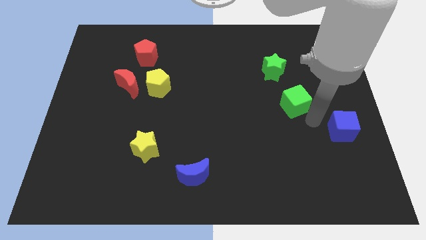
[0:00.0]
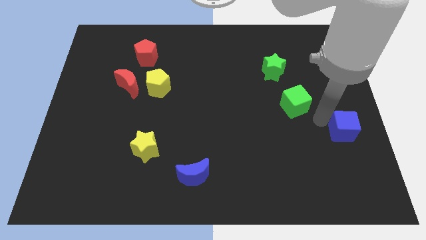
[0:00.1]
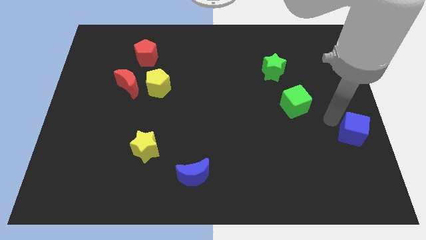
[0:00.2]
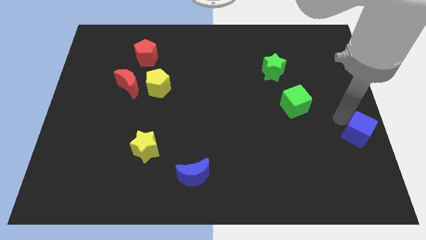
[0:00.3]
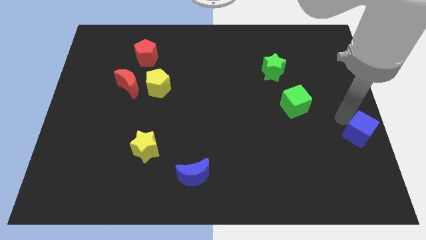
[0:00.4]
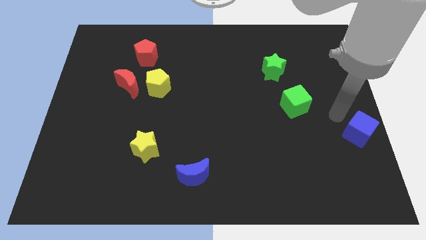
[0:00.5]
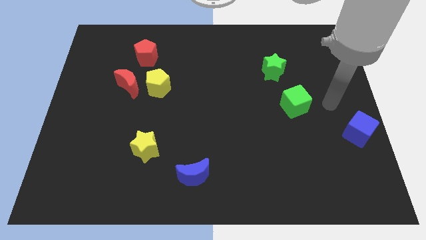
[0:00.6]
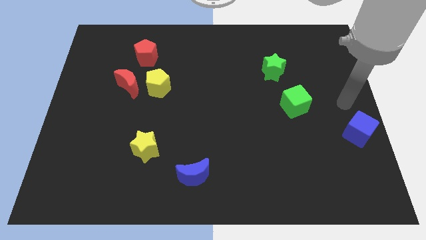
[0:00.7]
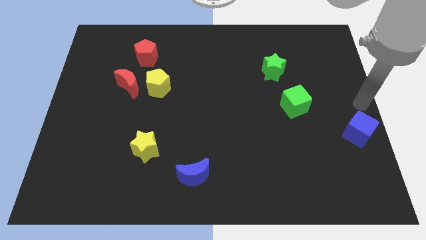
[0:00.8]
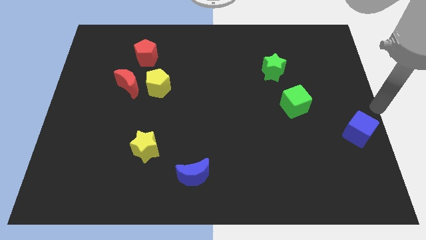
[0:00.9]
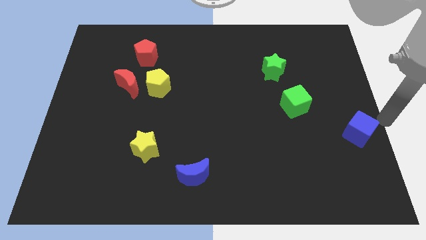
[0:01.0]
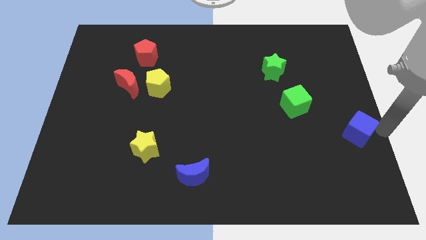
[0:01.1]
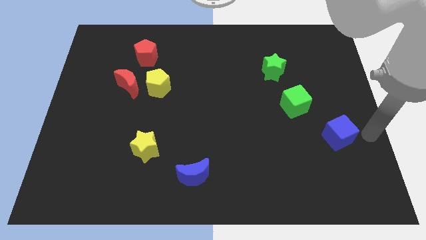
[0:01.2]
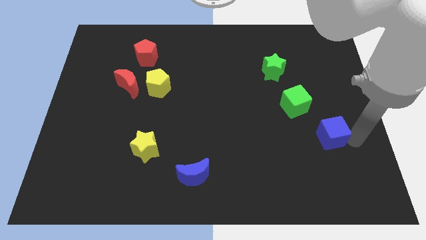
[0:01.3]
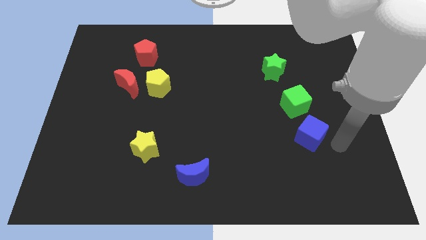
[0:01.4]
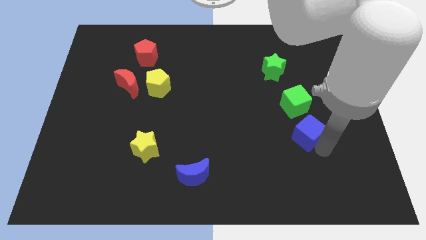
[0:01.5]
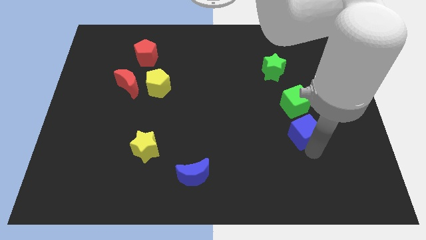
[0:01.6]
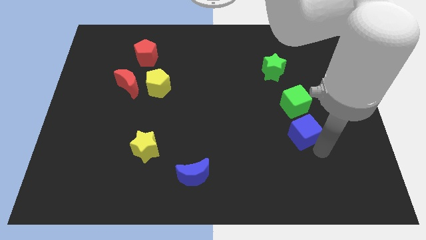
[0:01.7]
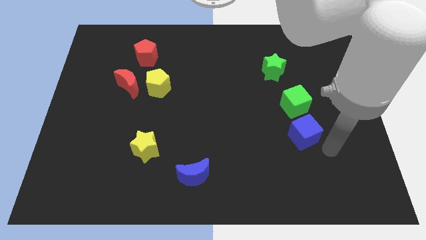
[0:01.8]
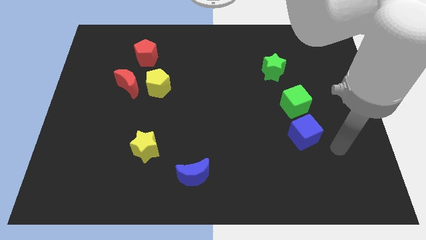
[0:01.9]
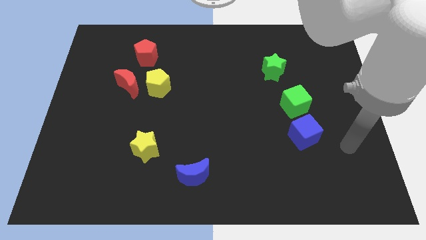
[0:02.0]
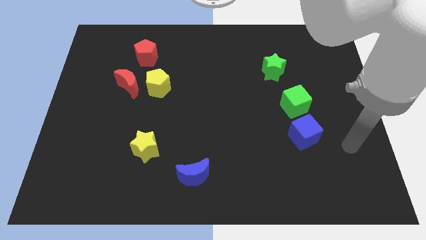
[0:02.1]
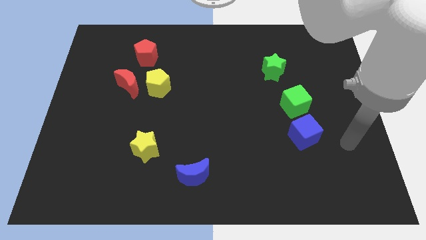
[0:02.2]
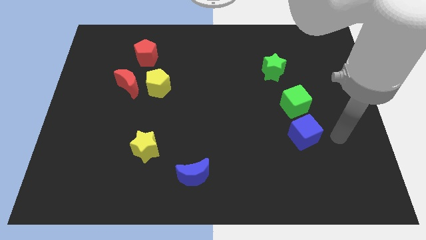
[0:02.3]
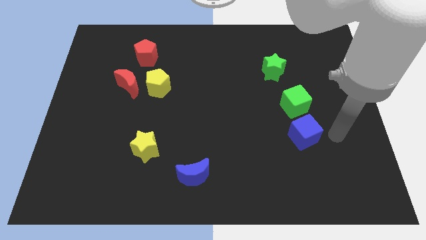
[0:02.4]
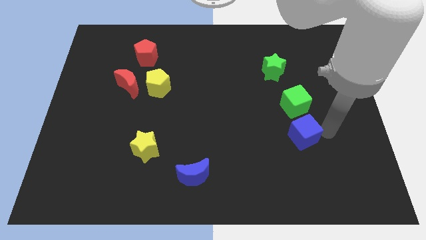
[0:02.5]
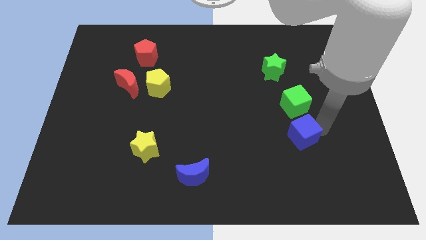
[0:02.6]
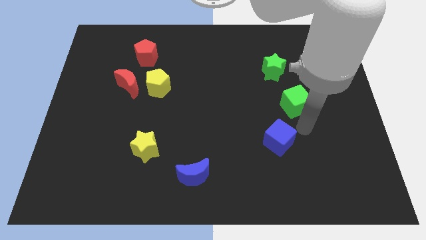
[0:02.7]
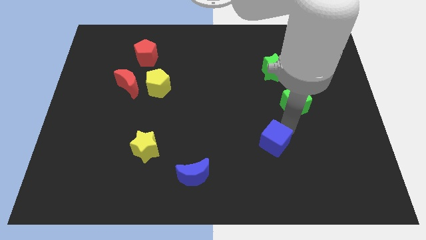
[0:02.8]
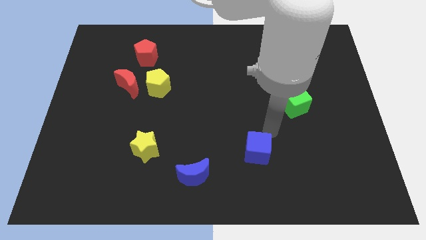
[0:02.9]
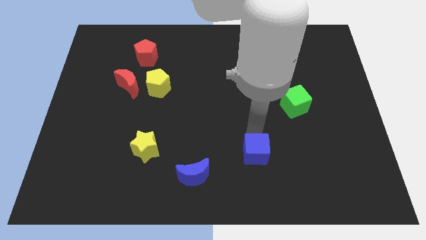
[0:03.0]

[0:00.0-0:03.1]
move the blue cube to the bottom left of the green cube

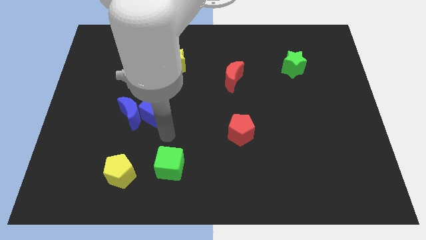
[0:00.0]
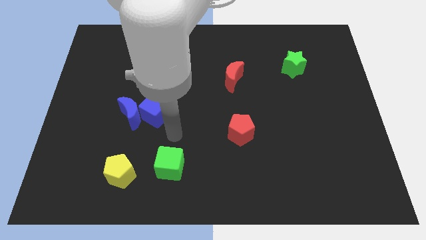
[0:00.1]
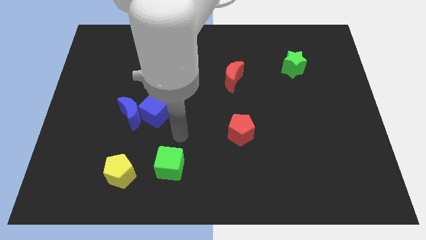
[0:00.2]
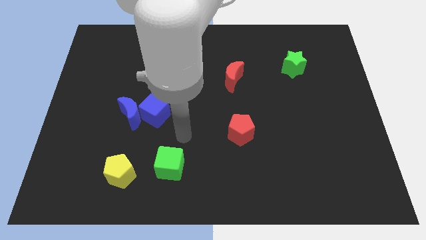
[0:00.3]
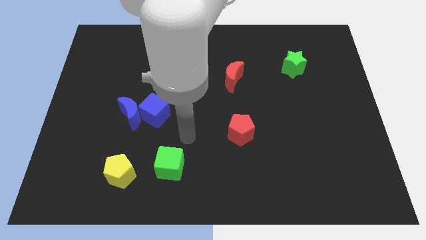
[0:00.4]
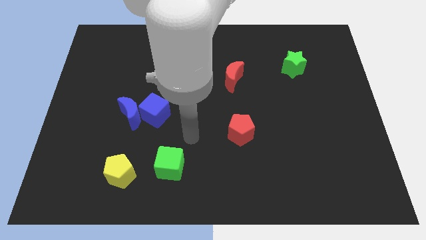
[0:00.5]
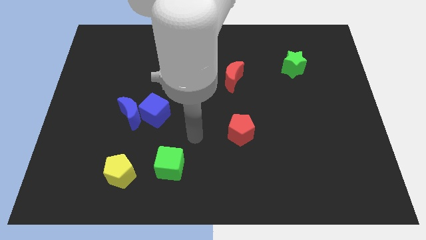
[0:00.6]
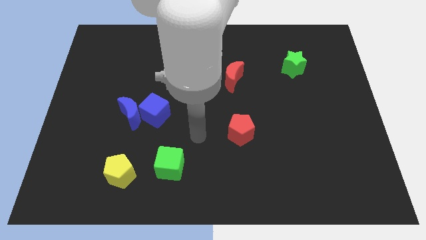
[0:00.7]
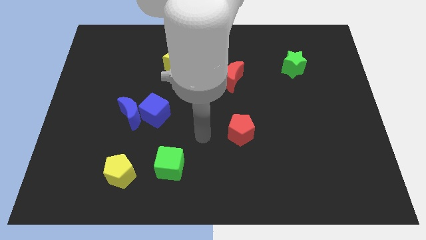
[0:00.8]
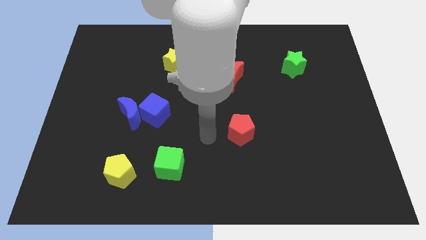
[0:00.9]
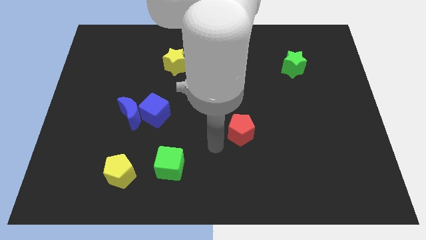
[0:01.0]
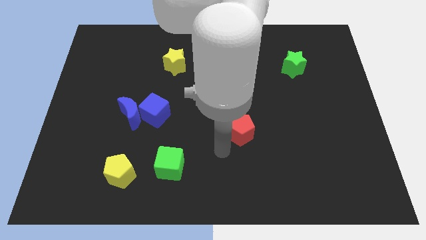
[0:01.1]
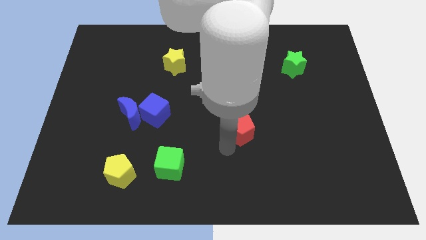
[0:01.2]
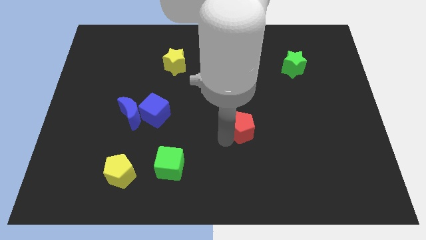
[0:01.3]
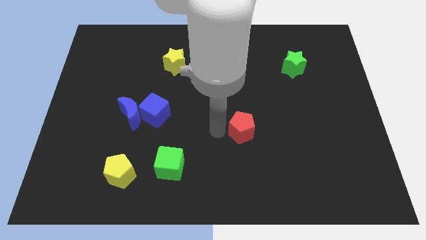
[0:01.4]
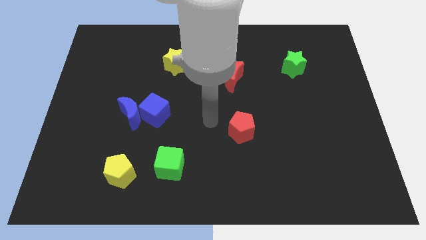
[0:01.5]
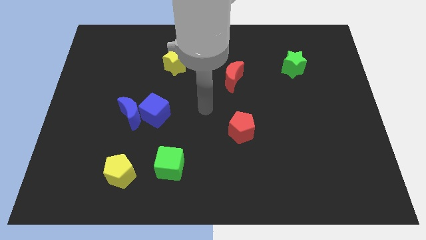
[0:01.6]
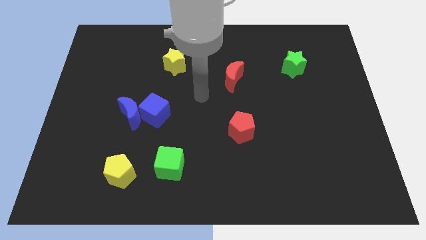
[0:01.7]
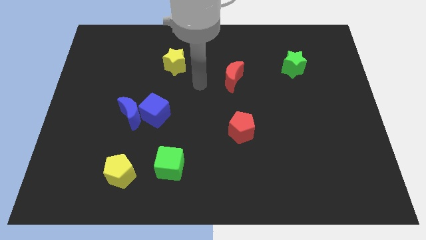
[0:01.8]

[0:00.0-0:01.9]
touch the left side of the red pentagon

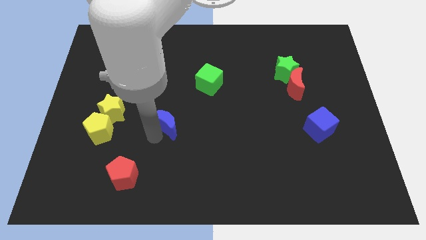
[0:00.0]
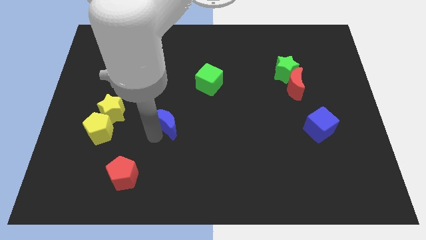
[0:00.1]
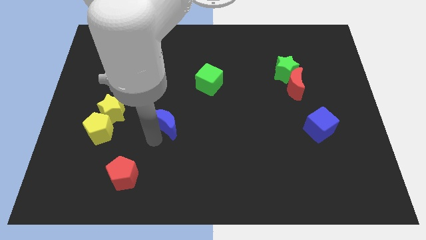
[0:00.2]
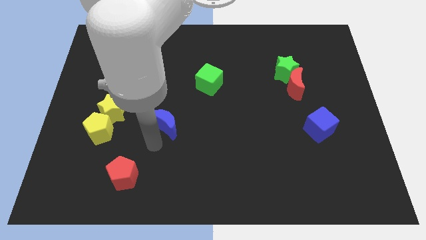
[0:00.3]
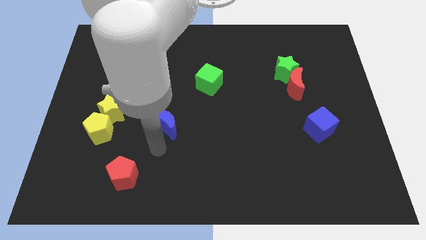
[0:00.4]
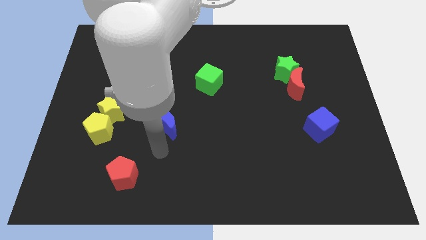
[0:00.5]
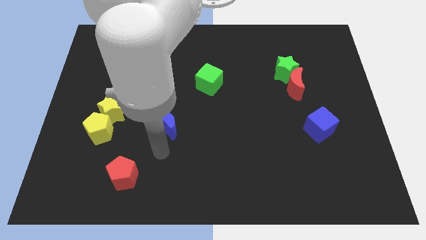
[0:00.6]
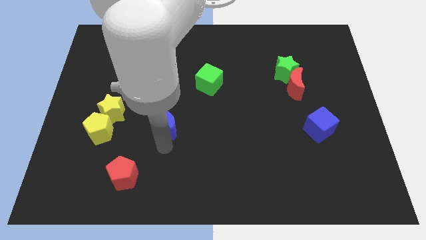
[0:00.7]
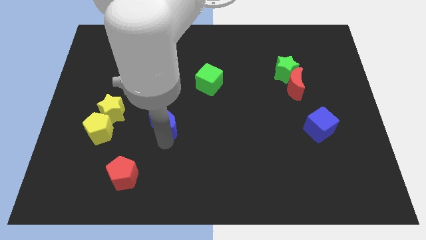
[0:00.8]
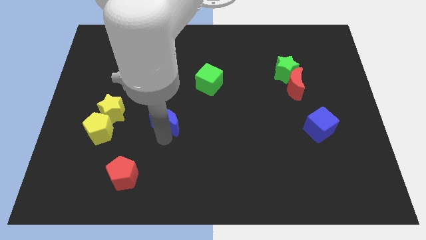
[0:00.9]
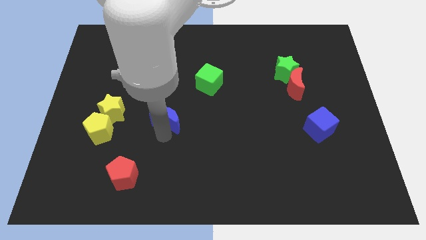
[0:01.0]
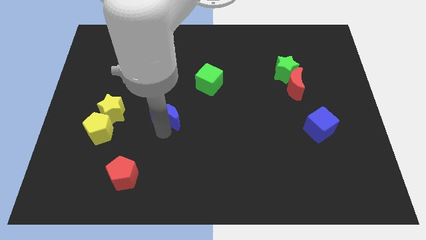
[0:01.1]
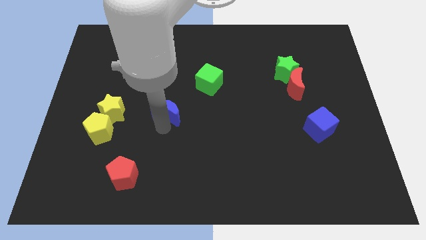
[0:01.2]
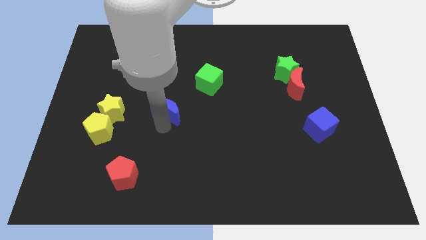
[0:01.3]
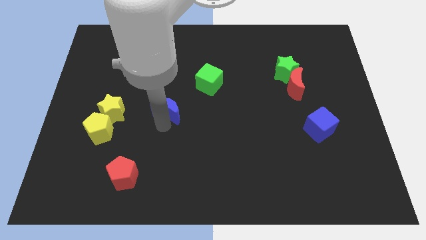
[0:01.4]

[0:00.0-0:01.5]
put the blue moon to the right side of the yellow star

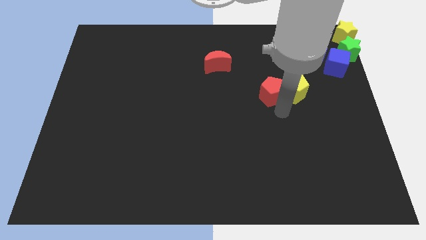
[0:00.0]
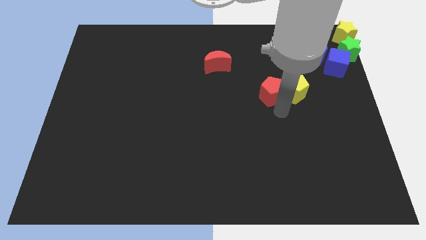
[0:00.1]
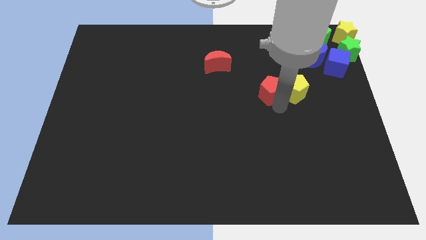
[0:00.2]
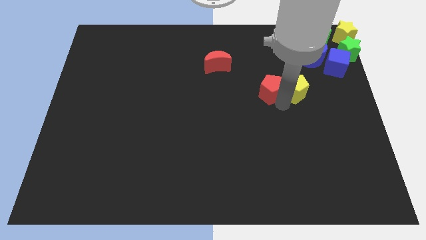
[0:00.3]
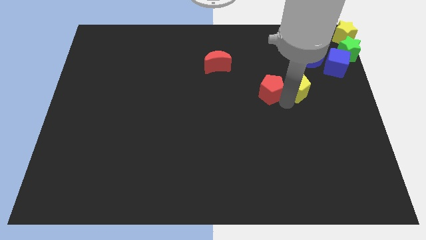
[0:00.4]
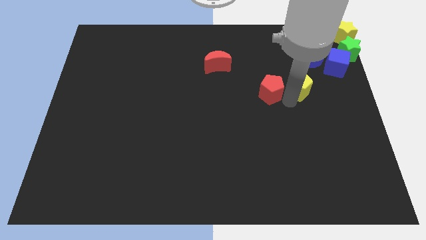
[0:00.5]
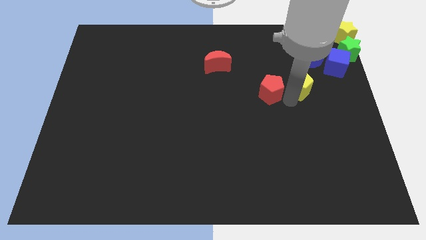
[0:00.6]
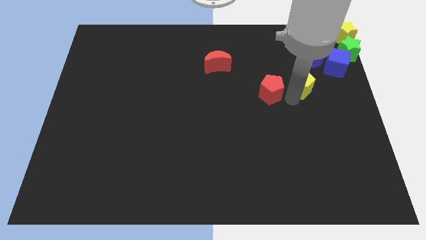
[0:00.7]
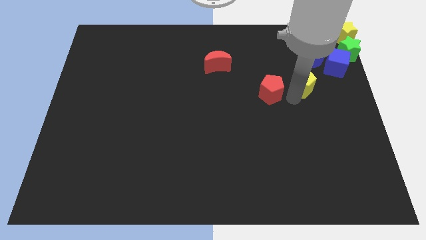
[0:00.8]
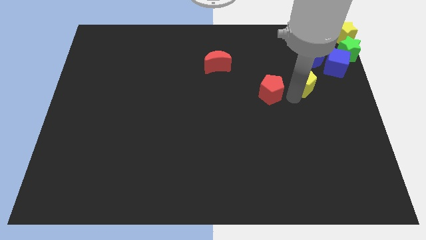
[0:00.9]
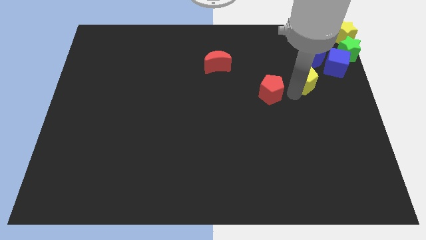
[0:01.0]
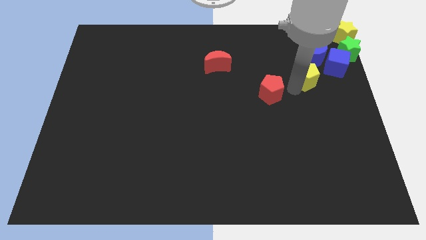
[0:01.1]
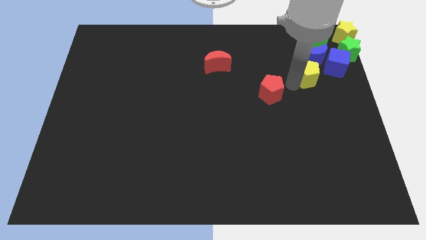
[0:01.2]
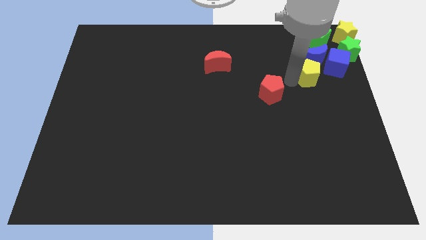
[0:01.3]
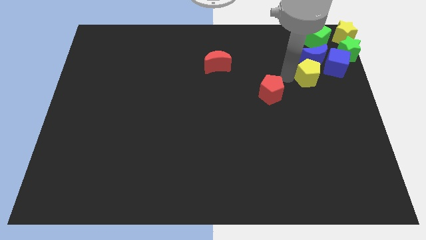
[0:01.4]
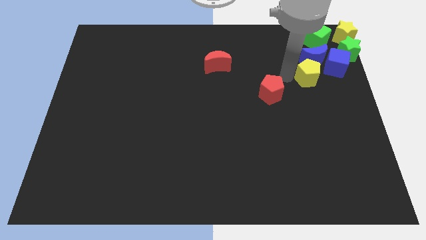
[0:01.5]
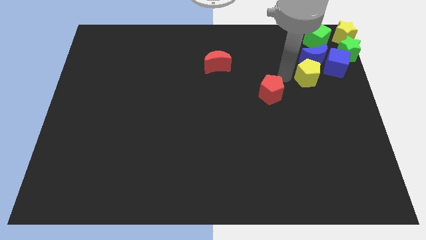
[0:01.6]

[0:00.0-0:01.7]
move the yellow pentagon into the blue moon

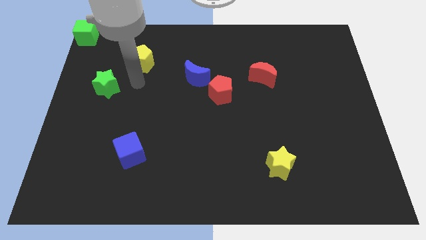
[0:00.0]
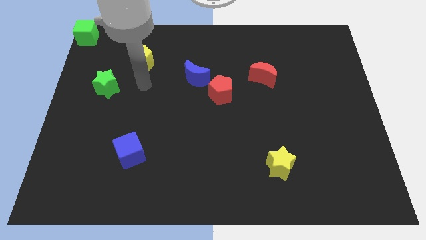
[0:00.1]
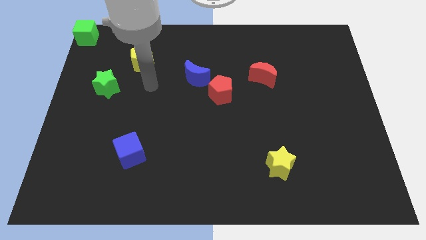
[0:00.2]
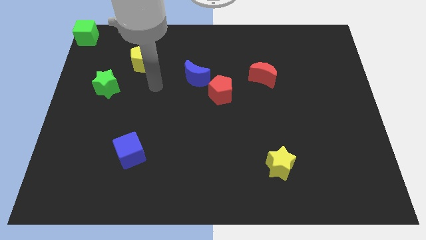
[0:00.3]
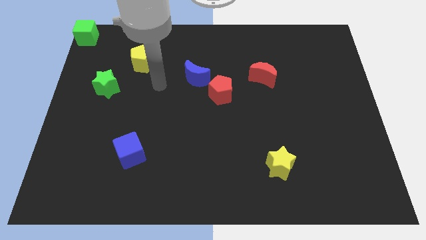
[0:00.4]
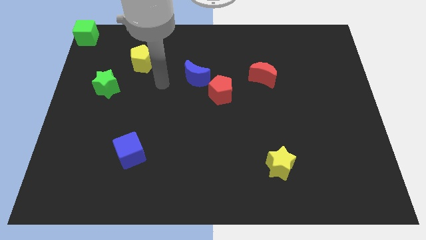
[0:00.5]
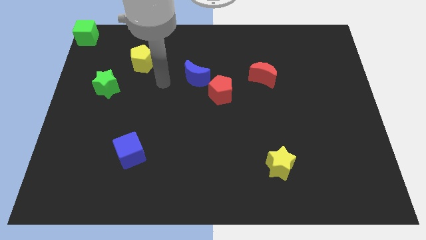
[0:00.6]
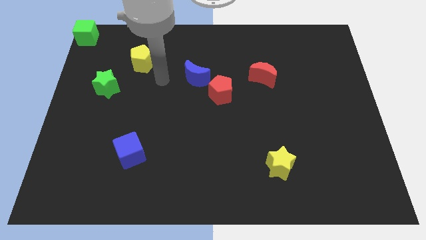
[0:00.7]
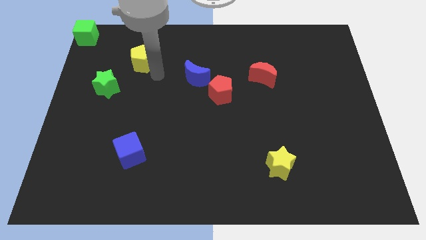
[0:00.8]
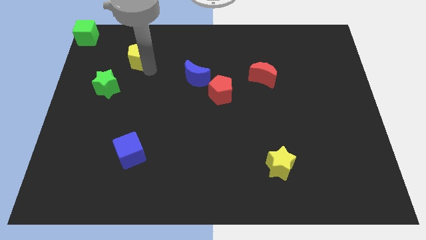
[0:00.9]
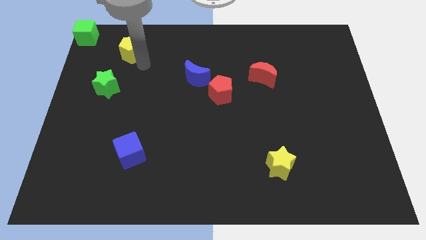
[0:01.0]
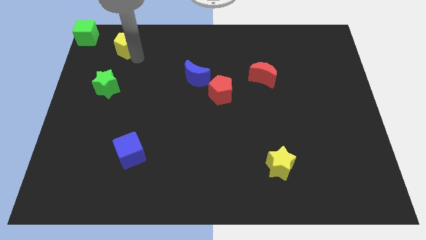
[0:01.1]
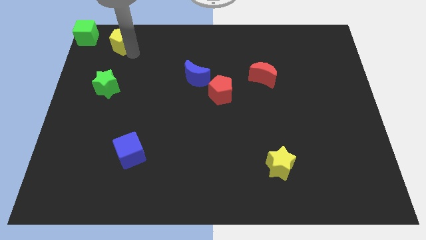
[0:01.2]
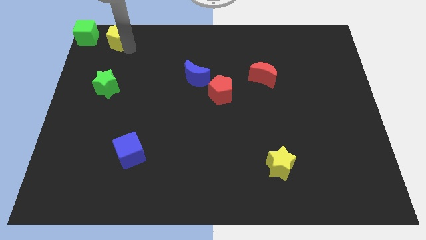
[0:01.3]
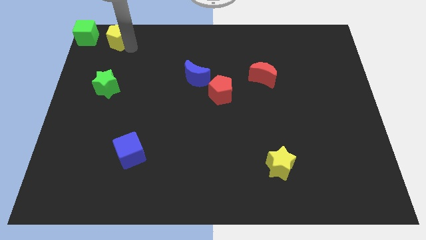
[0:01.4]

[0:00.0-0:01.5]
put the yellow pentagon above the green star
